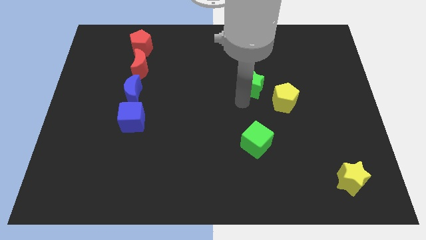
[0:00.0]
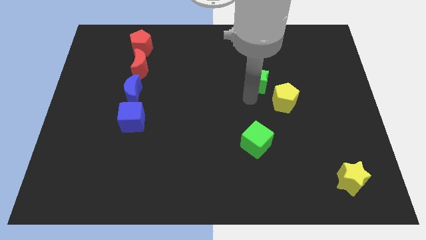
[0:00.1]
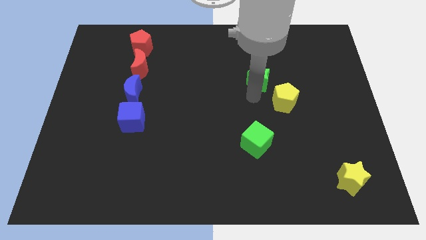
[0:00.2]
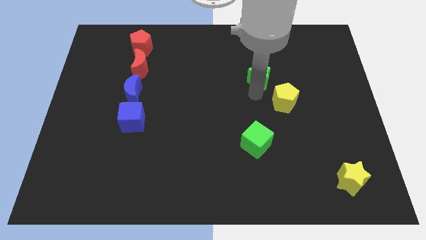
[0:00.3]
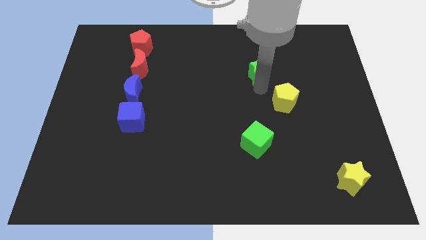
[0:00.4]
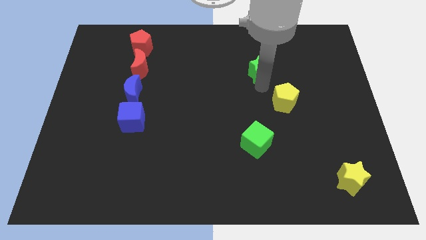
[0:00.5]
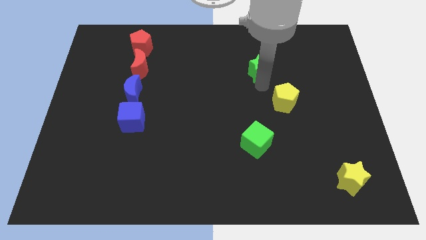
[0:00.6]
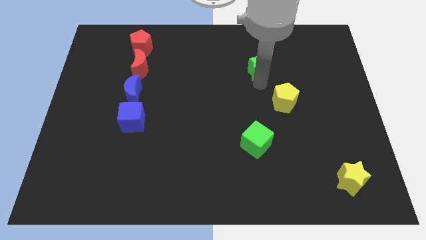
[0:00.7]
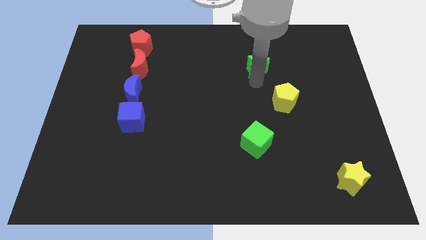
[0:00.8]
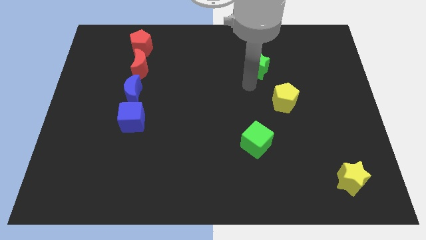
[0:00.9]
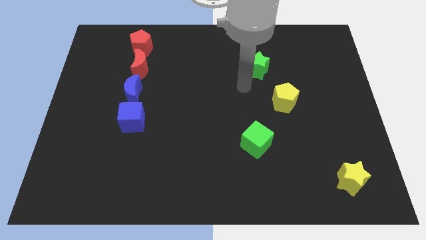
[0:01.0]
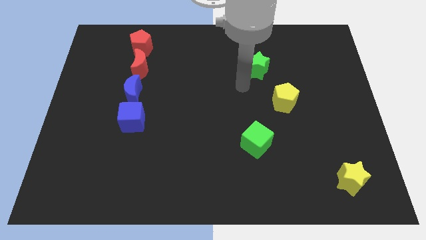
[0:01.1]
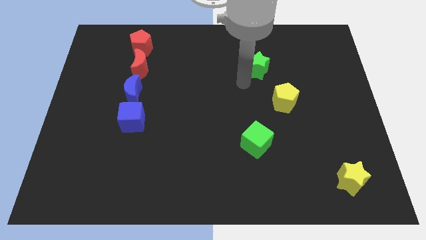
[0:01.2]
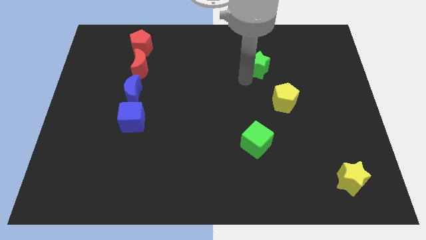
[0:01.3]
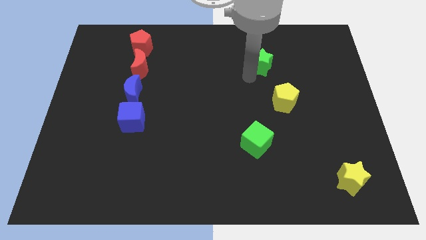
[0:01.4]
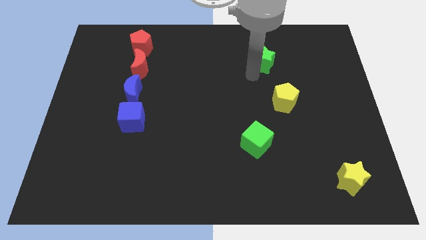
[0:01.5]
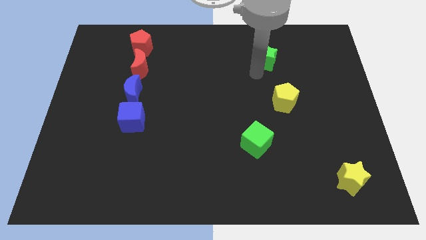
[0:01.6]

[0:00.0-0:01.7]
push the green star upwards a bit

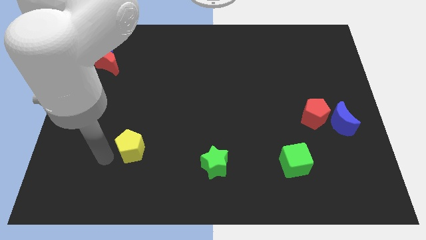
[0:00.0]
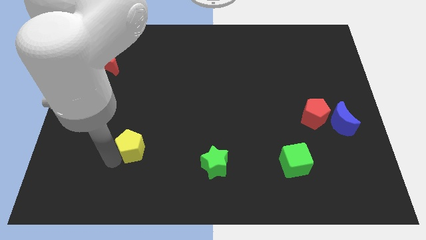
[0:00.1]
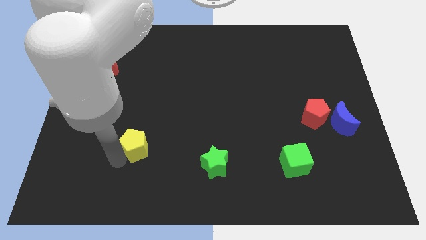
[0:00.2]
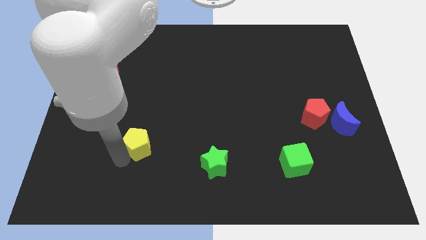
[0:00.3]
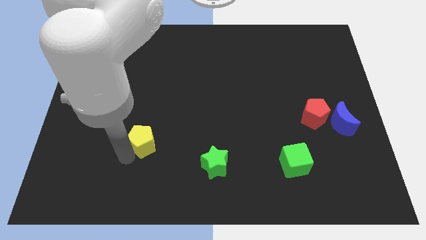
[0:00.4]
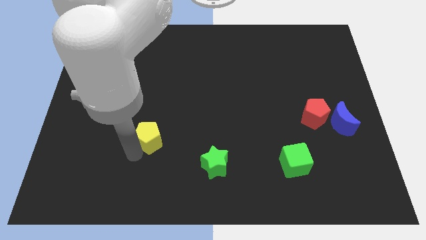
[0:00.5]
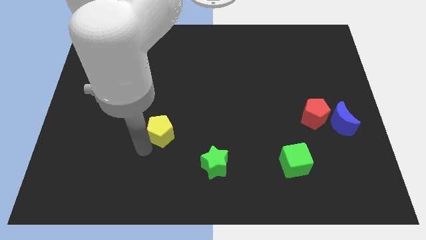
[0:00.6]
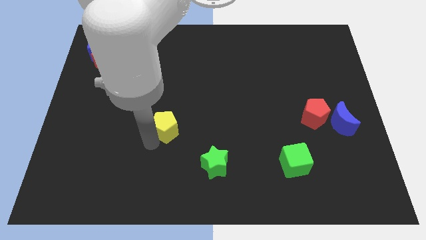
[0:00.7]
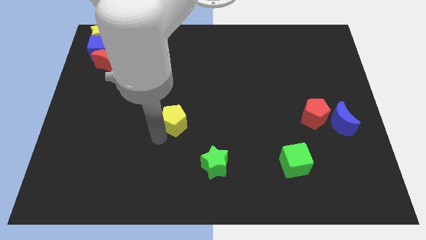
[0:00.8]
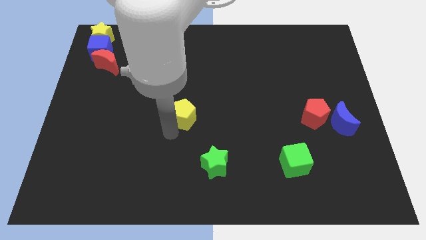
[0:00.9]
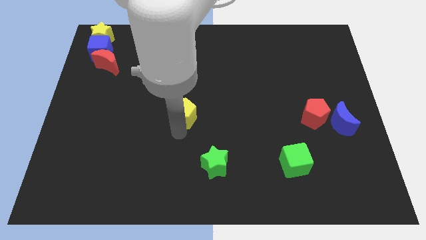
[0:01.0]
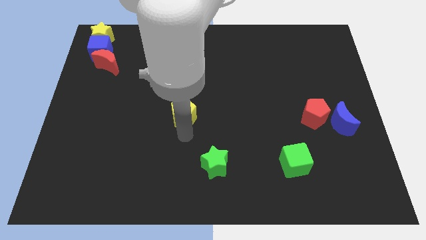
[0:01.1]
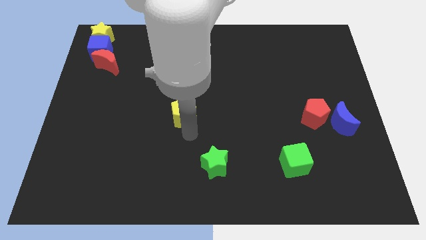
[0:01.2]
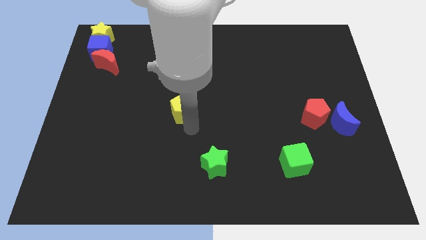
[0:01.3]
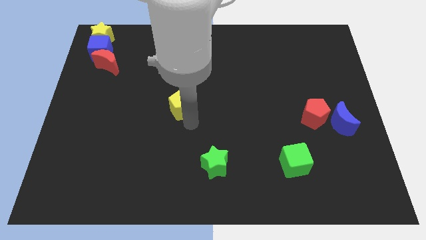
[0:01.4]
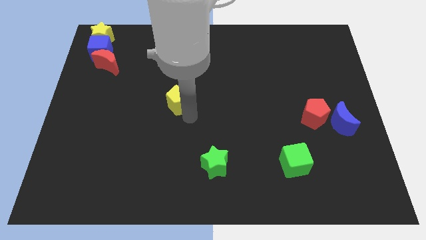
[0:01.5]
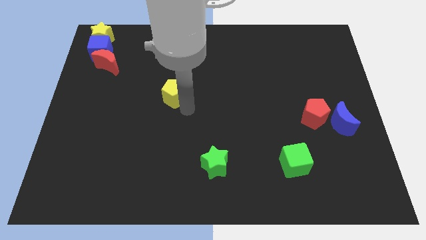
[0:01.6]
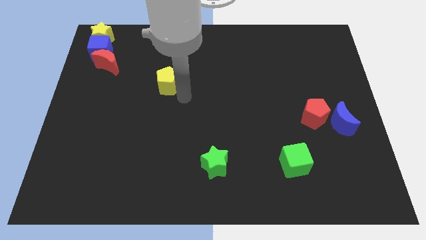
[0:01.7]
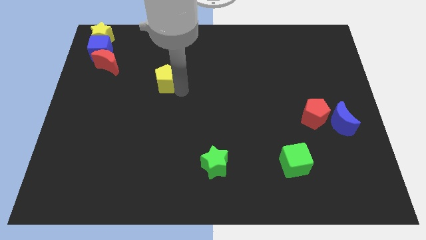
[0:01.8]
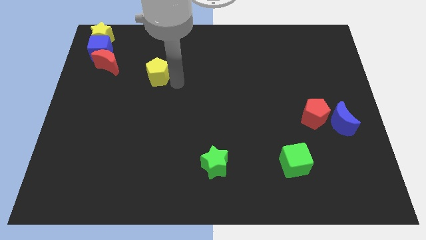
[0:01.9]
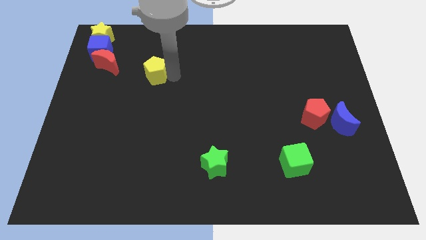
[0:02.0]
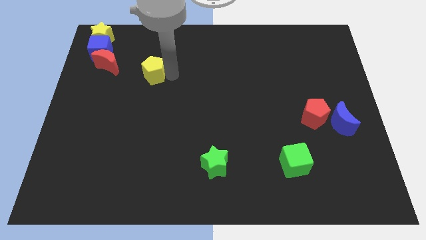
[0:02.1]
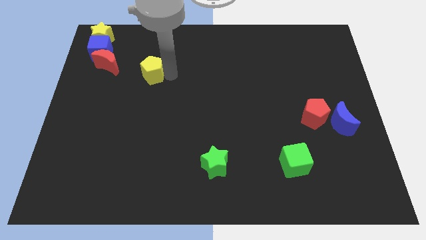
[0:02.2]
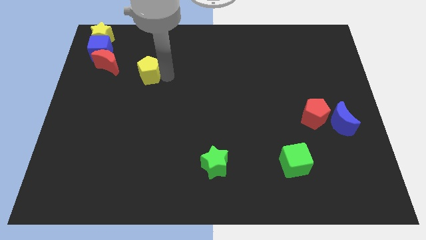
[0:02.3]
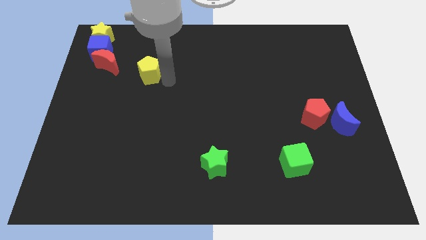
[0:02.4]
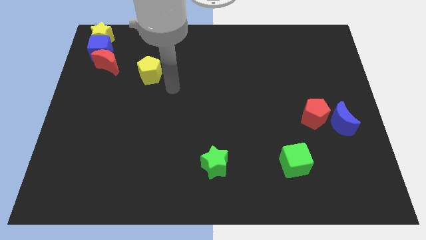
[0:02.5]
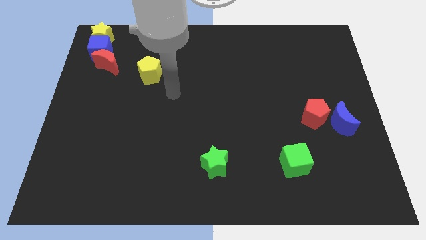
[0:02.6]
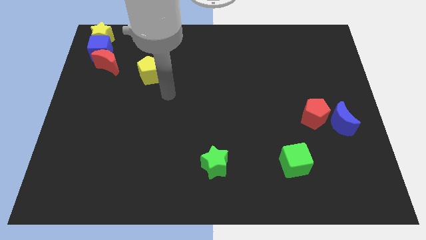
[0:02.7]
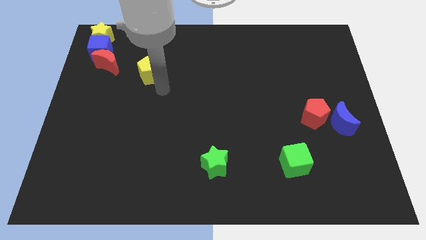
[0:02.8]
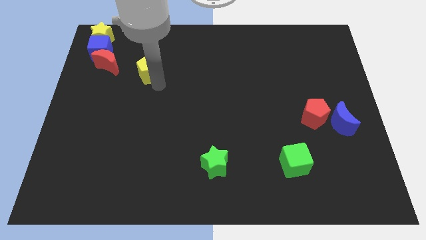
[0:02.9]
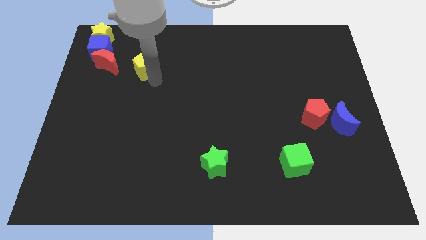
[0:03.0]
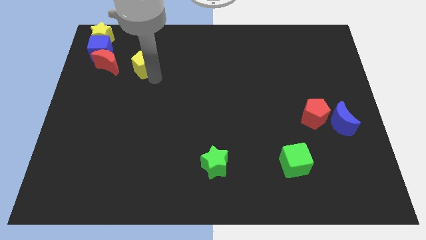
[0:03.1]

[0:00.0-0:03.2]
put the yellow pentagon right to the red moon

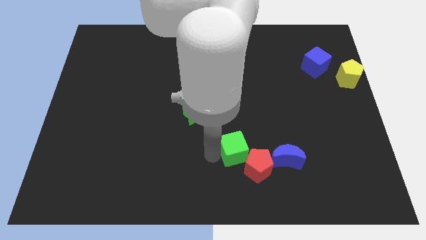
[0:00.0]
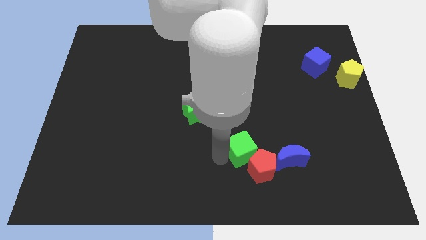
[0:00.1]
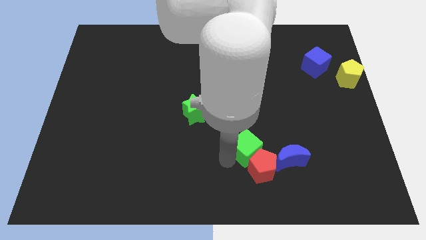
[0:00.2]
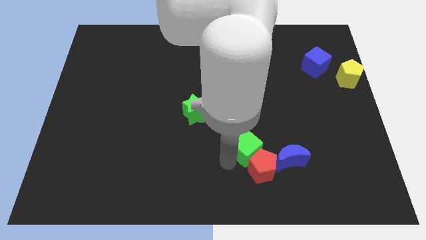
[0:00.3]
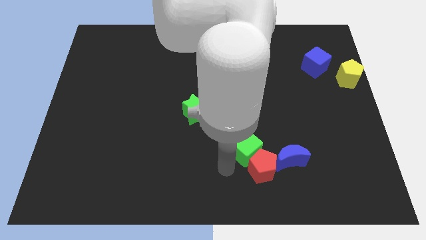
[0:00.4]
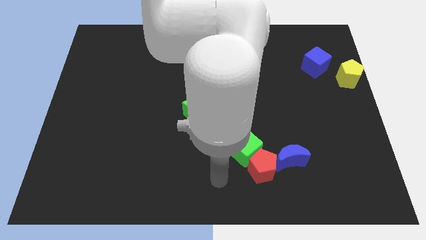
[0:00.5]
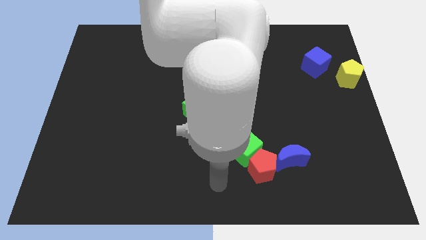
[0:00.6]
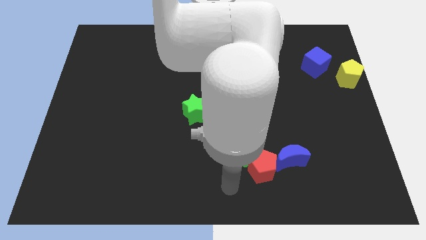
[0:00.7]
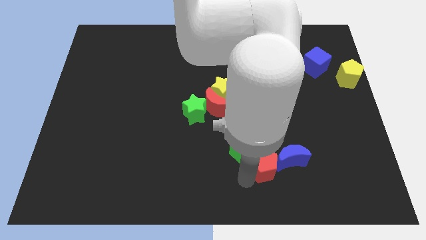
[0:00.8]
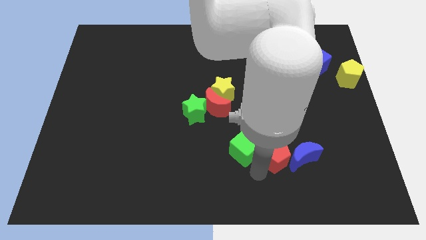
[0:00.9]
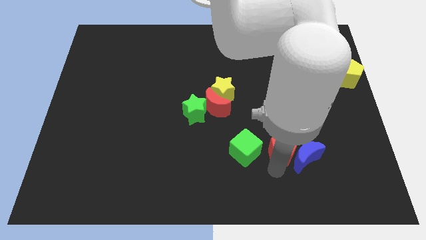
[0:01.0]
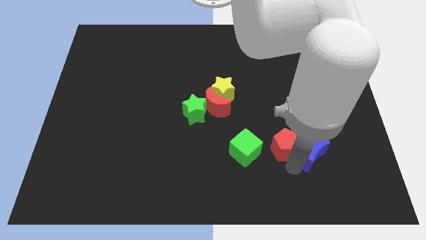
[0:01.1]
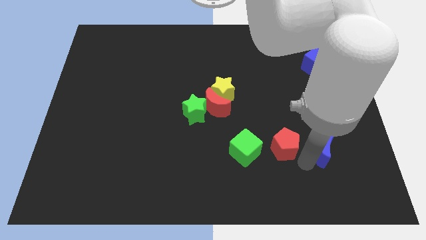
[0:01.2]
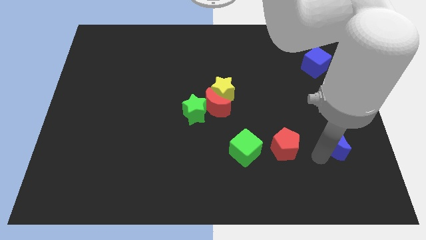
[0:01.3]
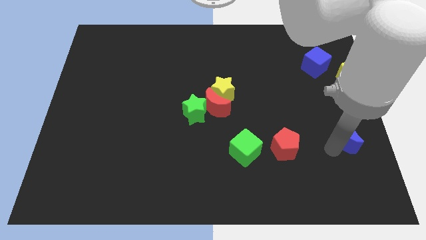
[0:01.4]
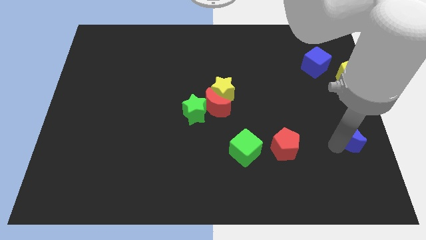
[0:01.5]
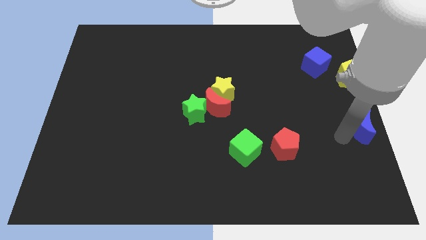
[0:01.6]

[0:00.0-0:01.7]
separate the blue moon from the red pentagon

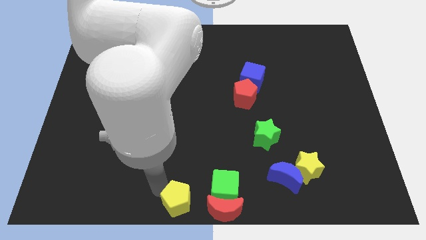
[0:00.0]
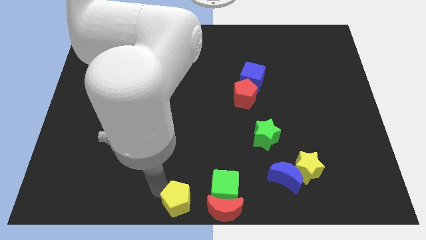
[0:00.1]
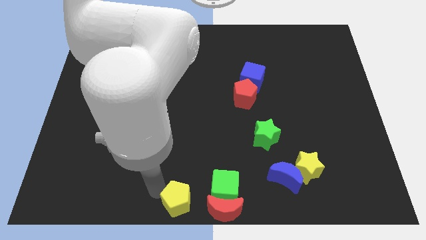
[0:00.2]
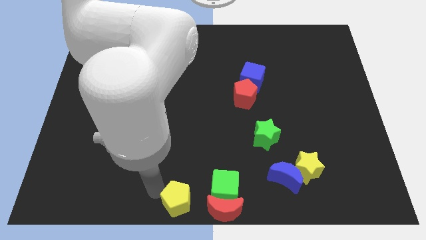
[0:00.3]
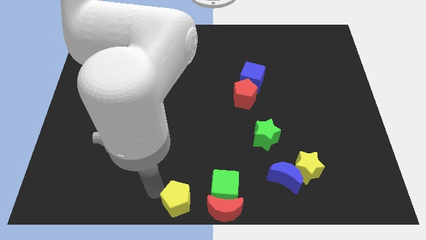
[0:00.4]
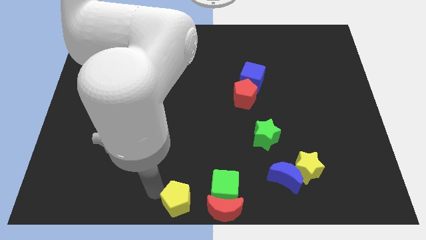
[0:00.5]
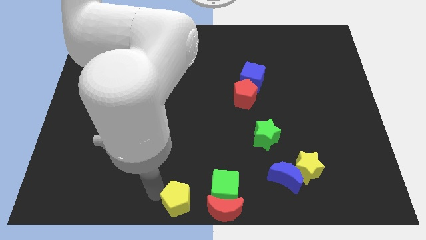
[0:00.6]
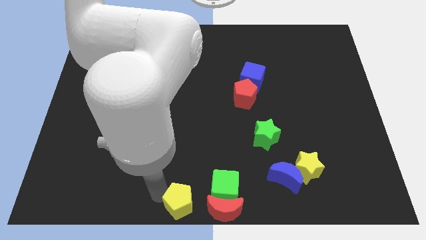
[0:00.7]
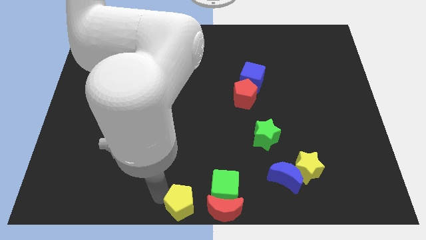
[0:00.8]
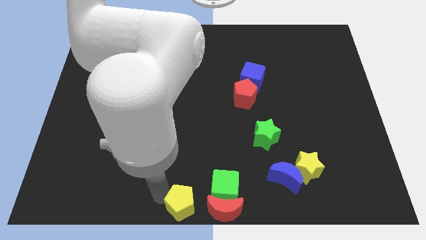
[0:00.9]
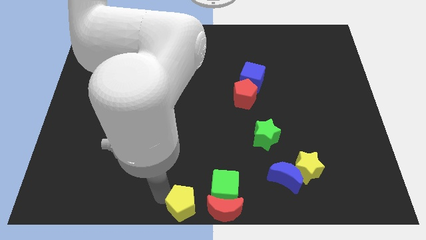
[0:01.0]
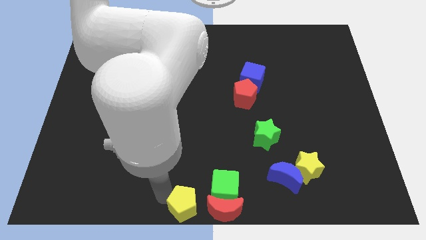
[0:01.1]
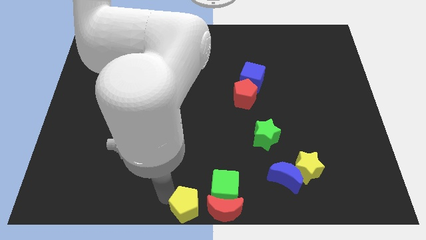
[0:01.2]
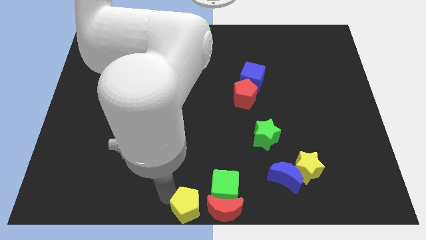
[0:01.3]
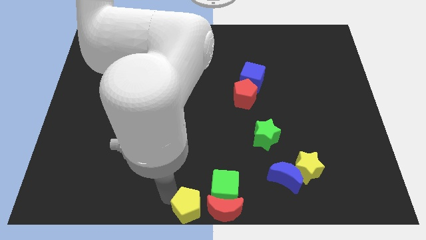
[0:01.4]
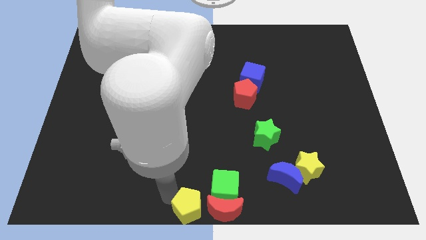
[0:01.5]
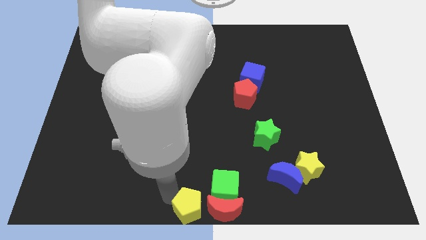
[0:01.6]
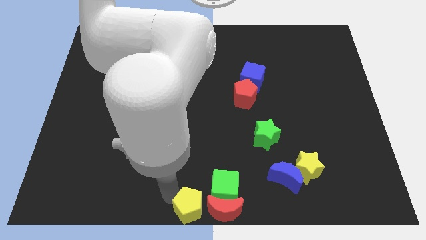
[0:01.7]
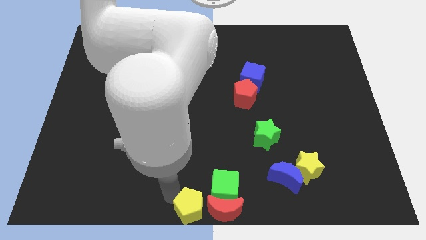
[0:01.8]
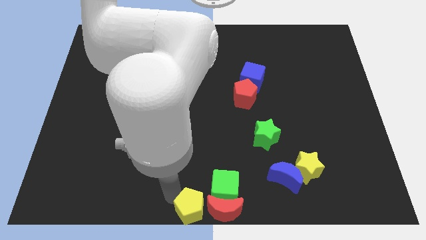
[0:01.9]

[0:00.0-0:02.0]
place the yellow pentagon on the left side of the red crescent

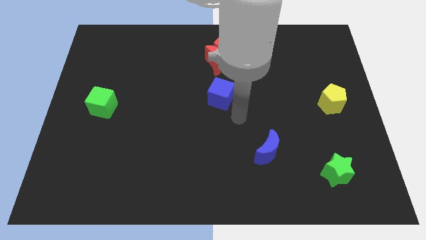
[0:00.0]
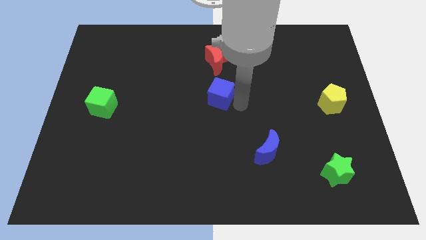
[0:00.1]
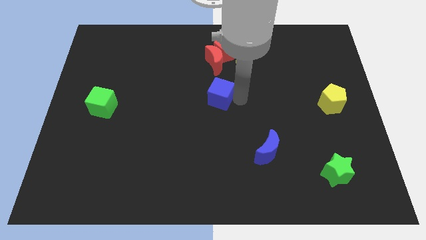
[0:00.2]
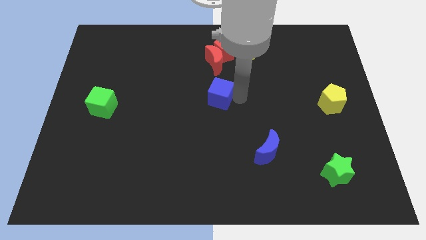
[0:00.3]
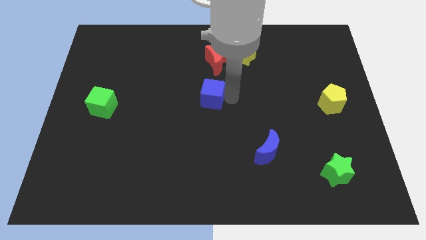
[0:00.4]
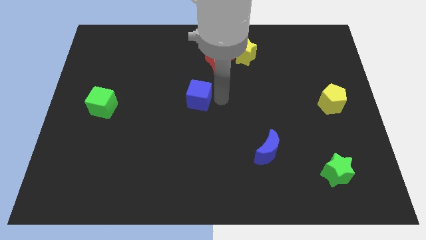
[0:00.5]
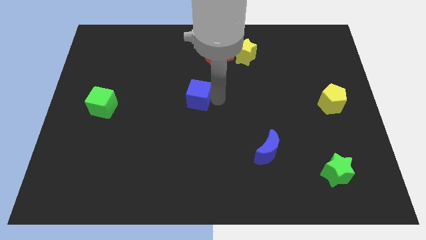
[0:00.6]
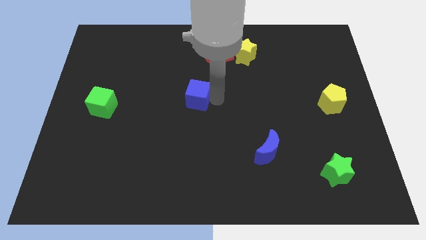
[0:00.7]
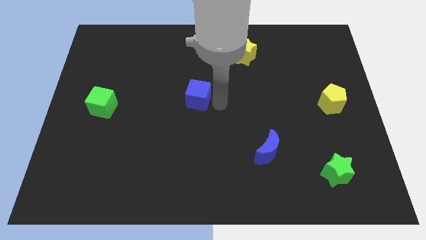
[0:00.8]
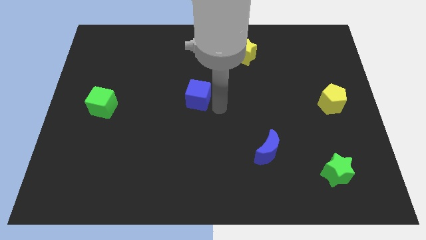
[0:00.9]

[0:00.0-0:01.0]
move the blue cube to the center
